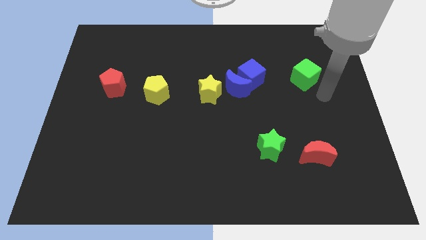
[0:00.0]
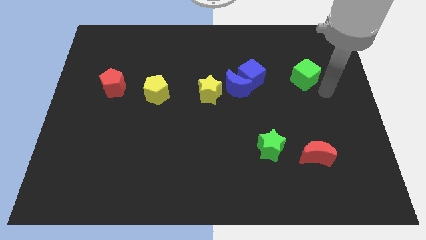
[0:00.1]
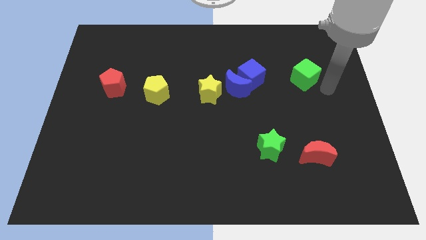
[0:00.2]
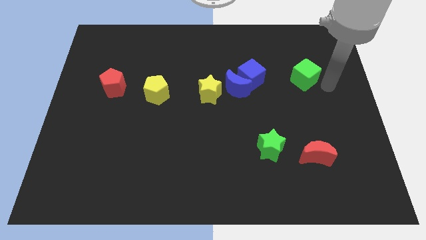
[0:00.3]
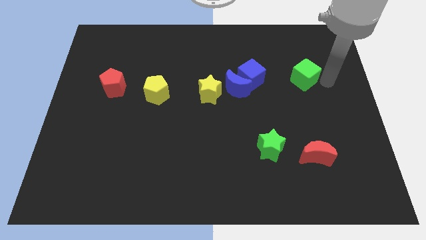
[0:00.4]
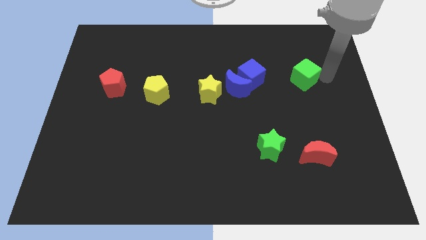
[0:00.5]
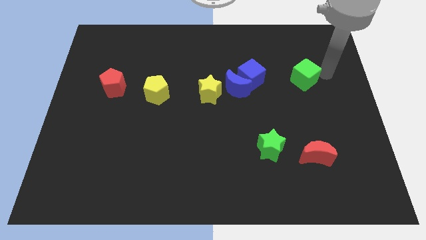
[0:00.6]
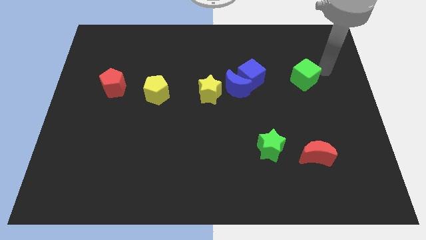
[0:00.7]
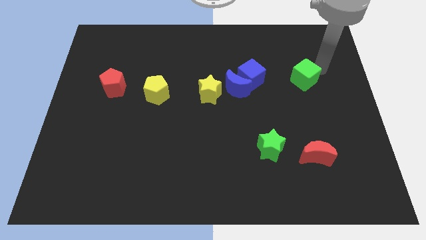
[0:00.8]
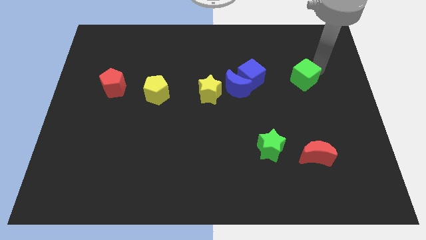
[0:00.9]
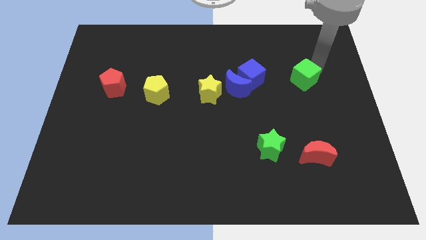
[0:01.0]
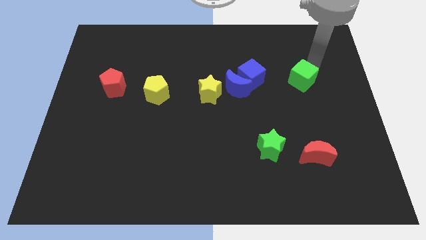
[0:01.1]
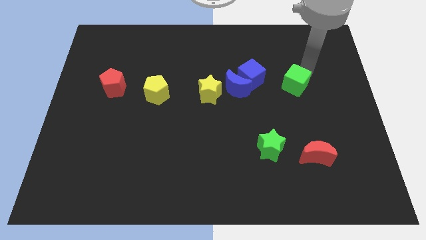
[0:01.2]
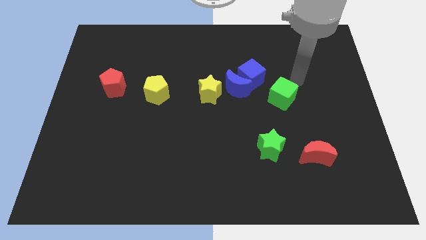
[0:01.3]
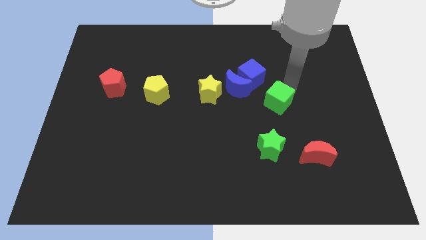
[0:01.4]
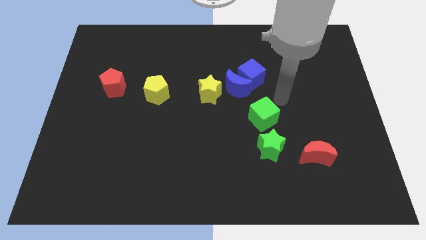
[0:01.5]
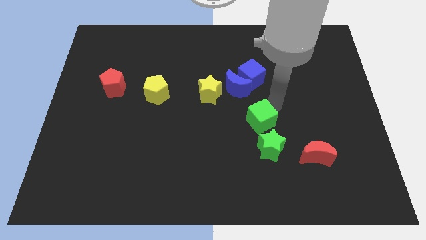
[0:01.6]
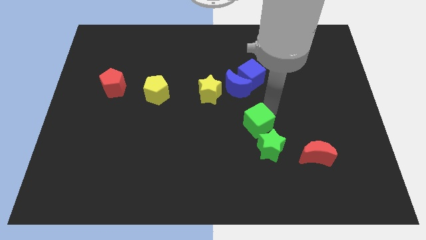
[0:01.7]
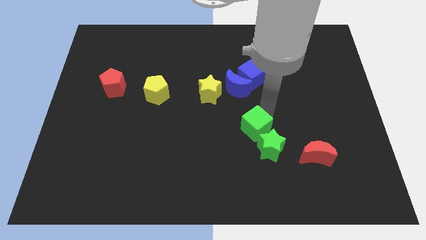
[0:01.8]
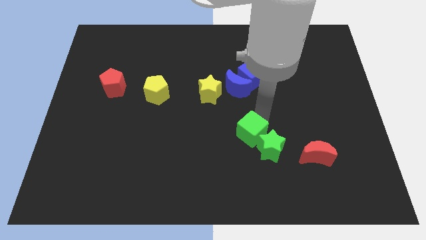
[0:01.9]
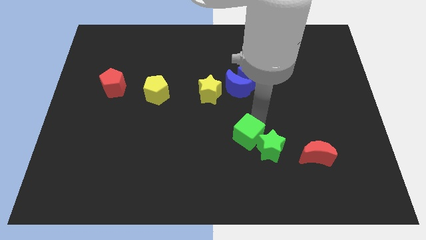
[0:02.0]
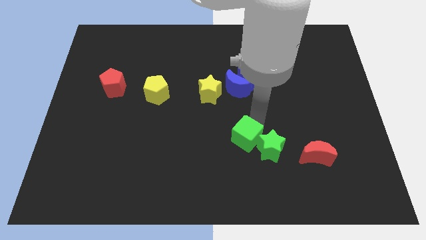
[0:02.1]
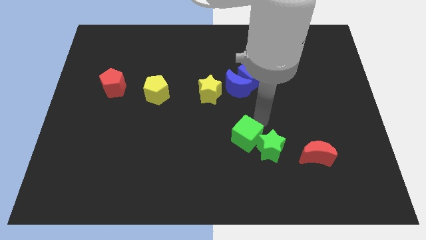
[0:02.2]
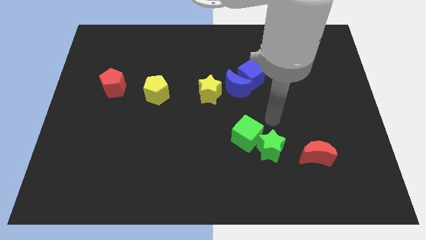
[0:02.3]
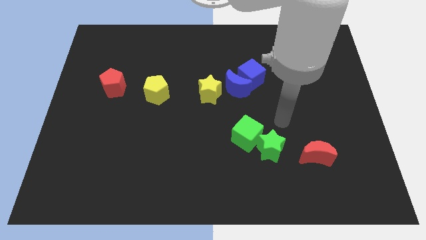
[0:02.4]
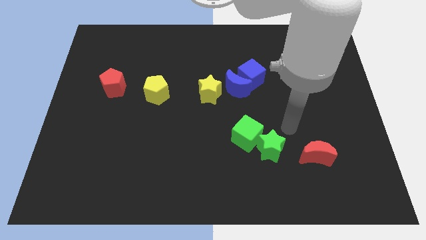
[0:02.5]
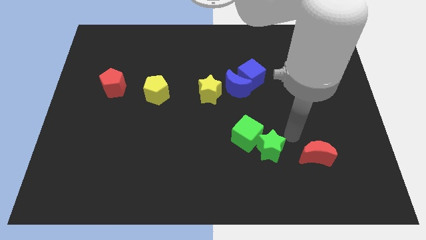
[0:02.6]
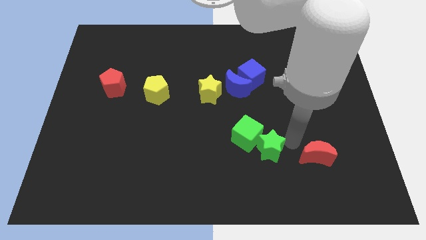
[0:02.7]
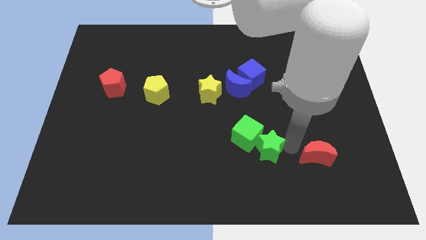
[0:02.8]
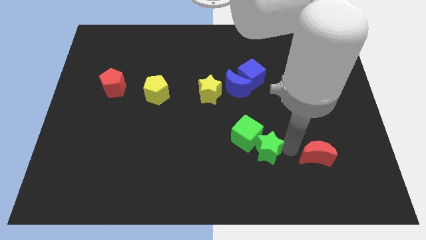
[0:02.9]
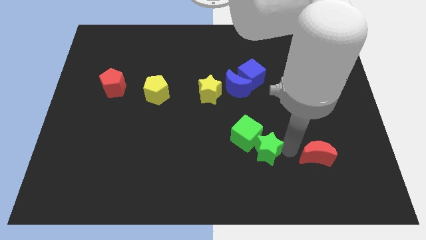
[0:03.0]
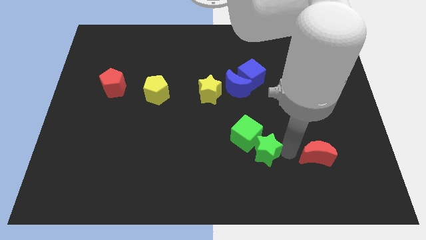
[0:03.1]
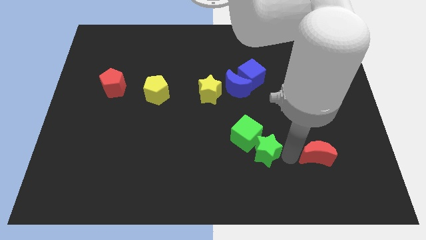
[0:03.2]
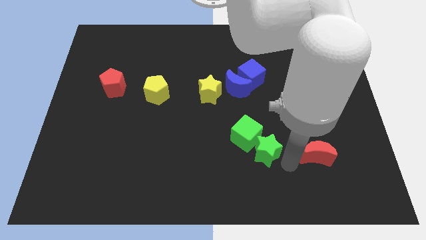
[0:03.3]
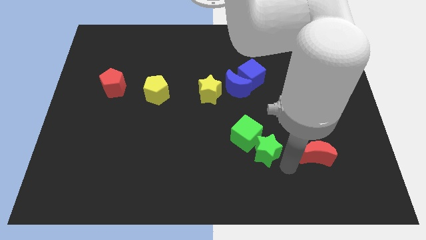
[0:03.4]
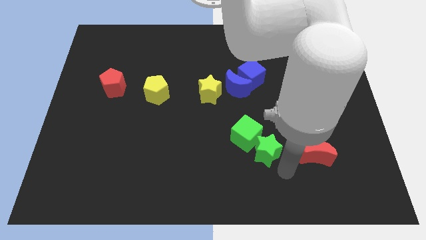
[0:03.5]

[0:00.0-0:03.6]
push the green cube into green star

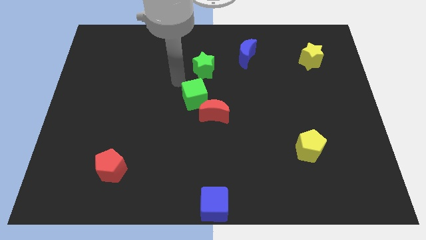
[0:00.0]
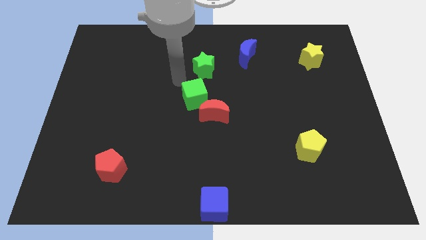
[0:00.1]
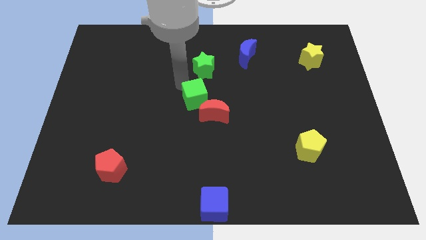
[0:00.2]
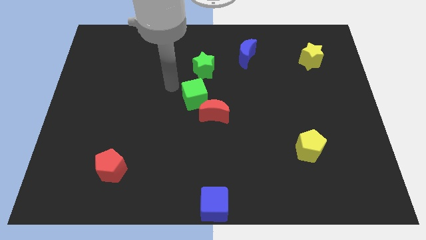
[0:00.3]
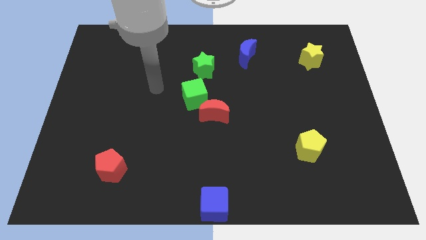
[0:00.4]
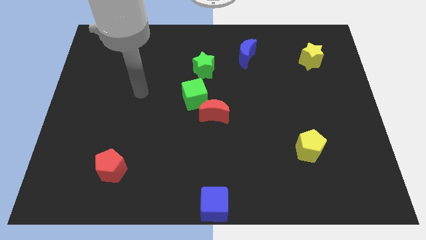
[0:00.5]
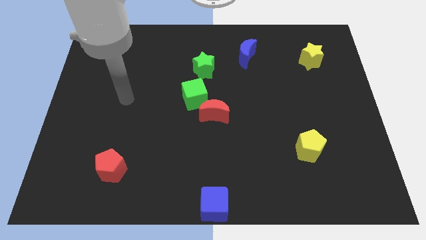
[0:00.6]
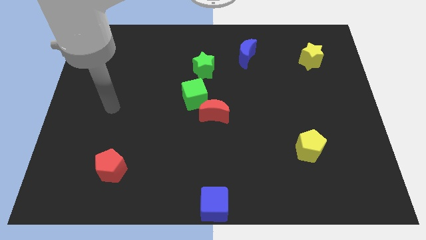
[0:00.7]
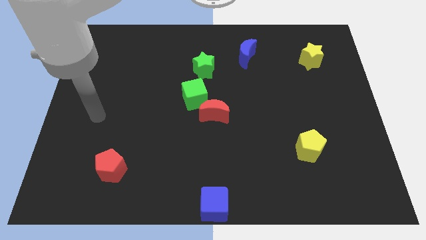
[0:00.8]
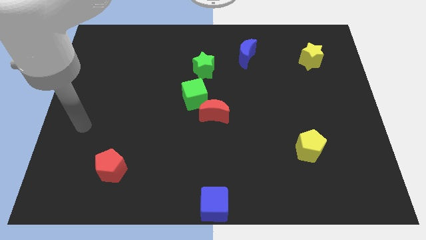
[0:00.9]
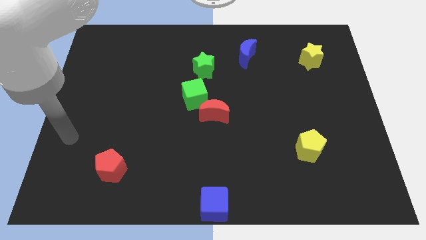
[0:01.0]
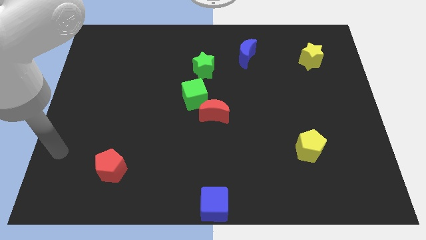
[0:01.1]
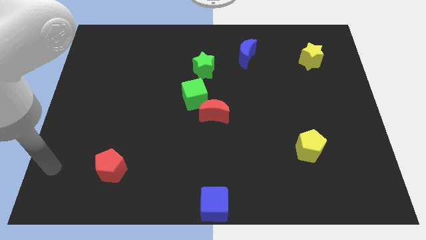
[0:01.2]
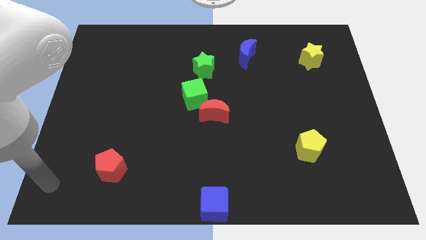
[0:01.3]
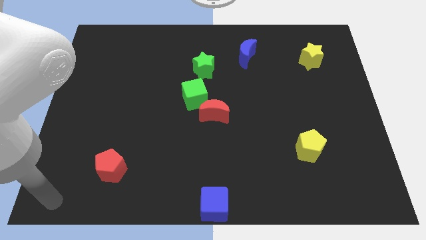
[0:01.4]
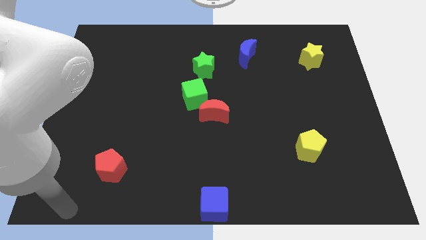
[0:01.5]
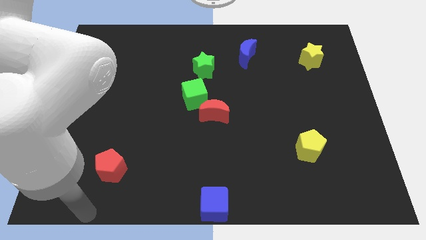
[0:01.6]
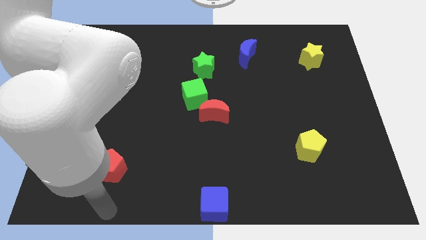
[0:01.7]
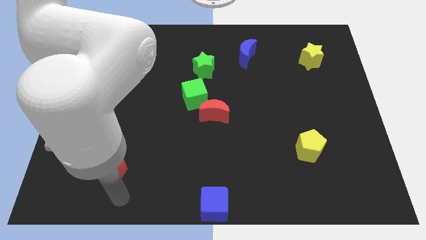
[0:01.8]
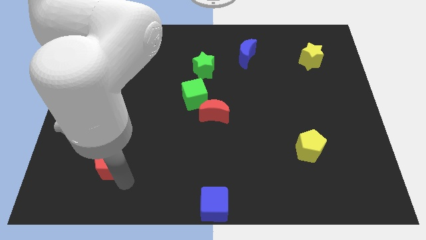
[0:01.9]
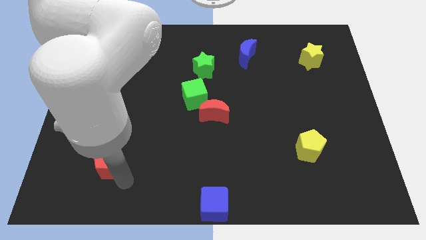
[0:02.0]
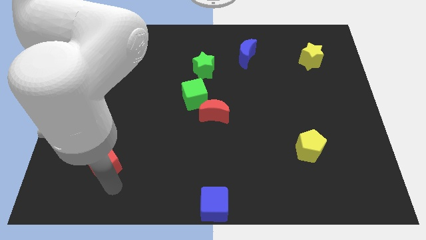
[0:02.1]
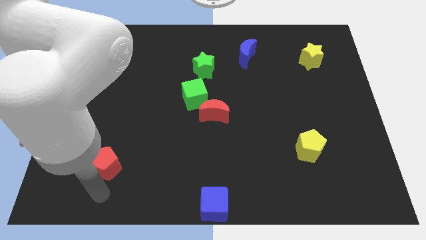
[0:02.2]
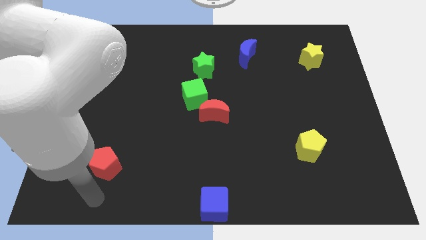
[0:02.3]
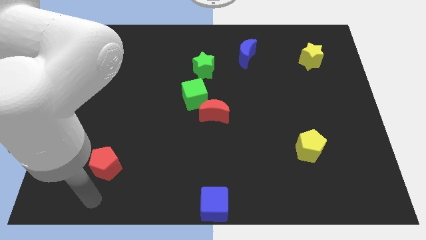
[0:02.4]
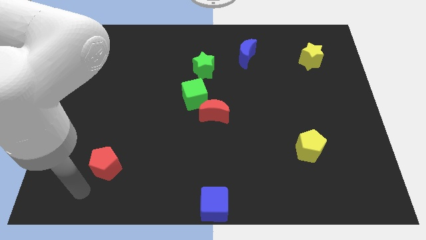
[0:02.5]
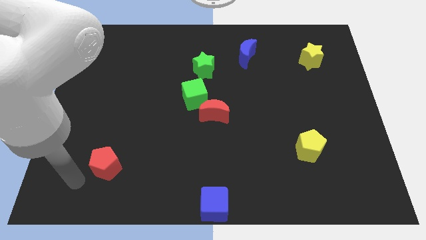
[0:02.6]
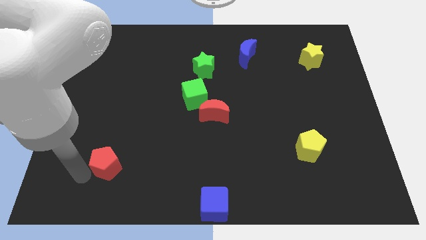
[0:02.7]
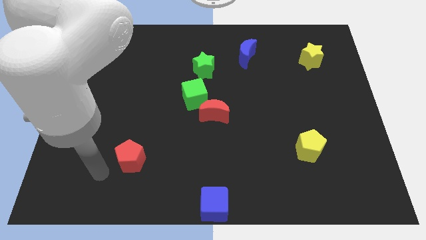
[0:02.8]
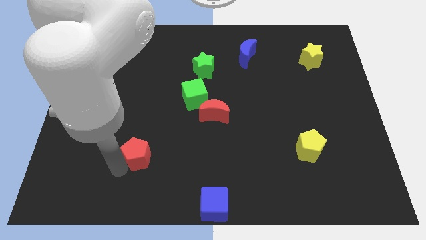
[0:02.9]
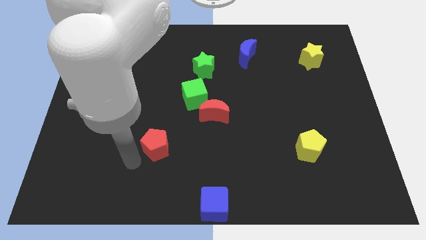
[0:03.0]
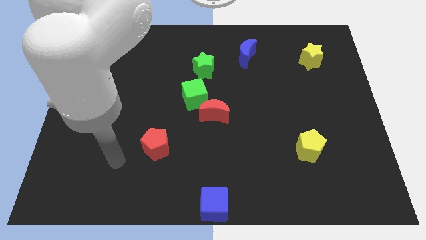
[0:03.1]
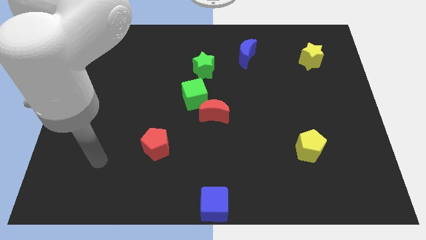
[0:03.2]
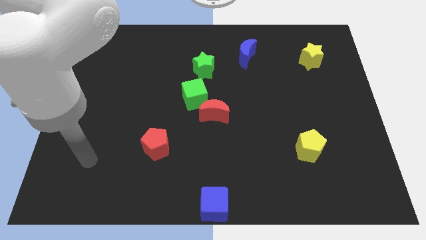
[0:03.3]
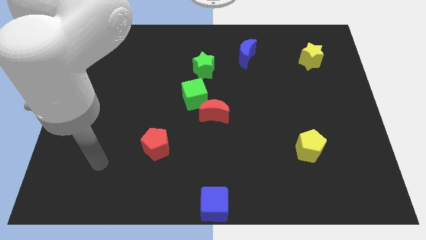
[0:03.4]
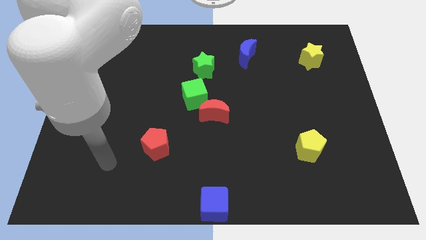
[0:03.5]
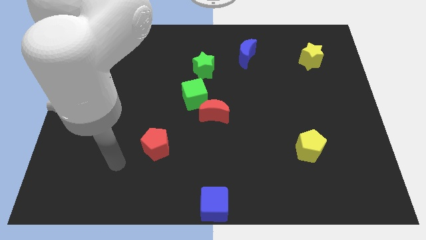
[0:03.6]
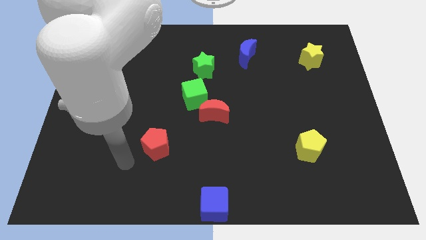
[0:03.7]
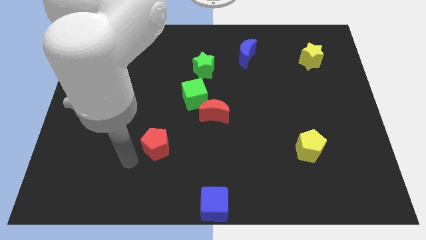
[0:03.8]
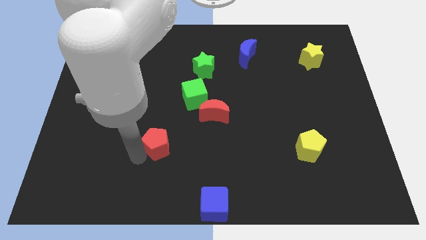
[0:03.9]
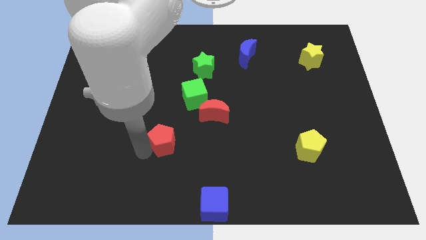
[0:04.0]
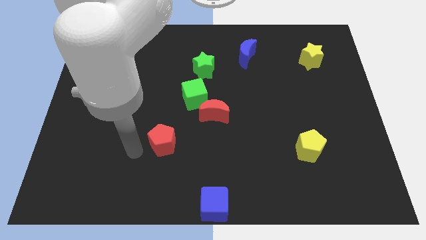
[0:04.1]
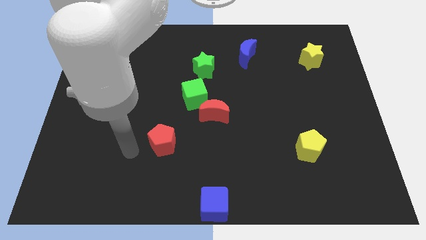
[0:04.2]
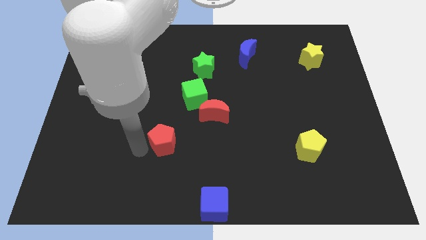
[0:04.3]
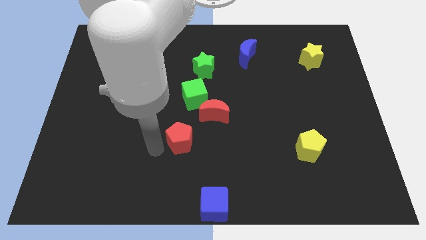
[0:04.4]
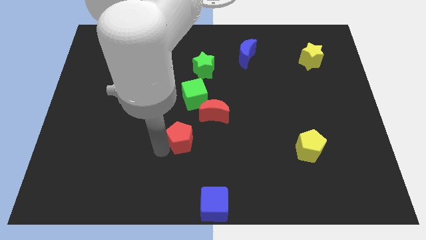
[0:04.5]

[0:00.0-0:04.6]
move your arm away from the green cube

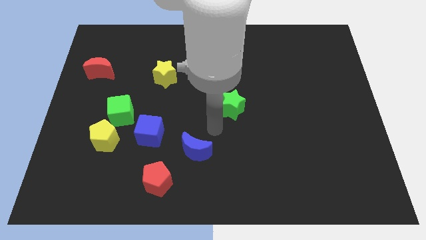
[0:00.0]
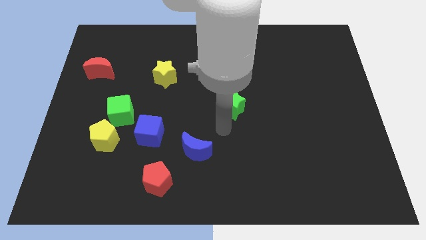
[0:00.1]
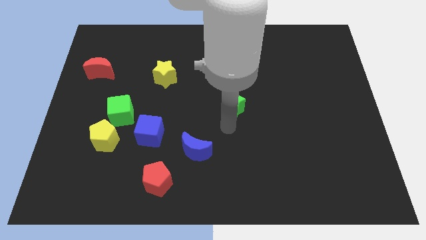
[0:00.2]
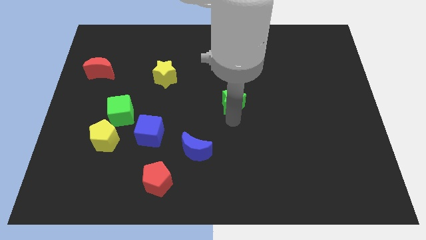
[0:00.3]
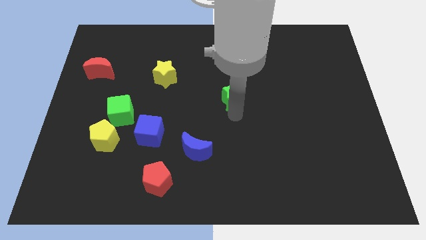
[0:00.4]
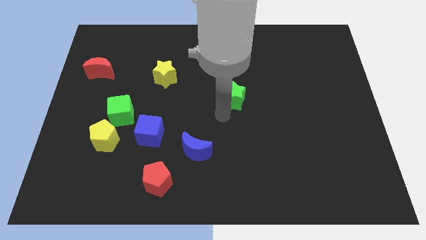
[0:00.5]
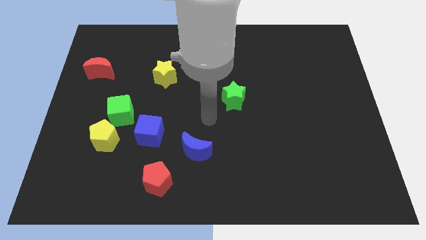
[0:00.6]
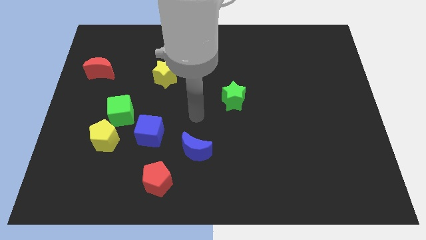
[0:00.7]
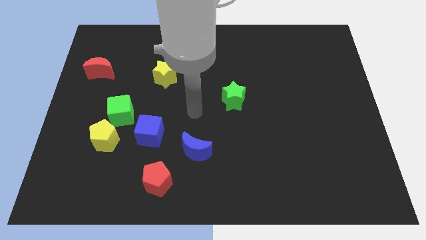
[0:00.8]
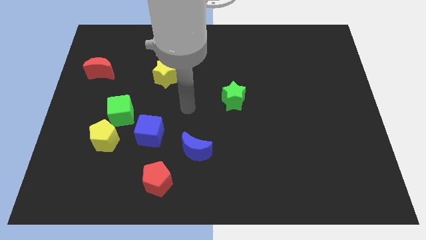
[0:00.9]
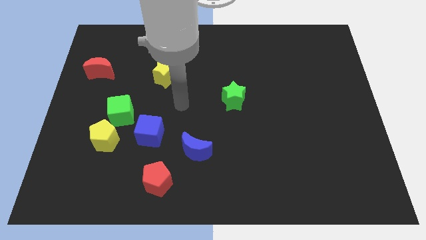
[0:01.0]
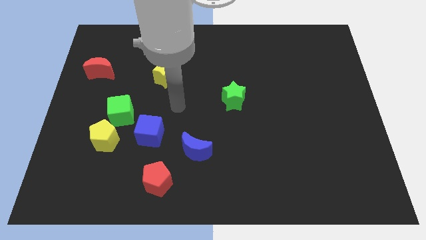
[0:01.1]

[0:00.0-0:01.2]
slide green star slightly upward
